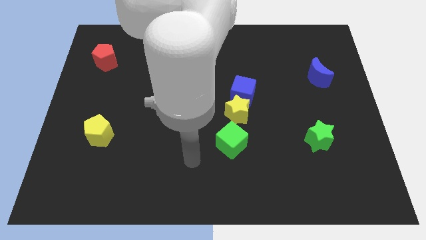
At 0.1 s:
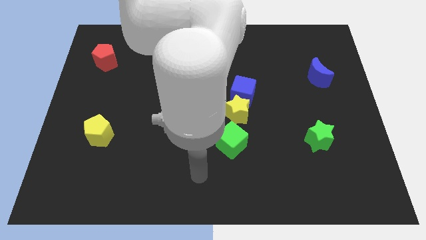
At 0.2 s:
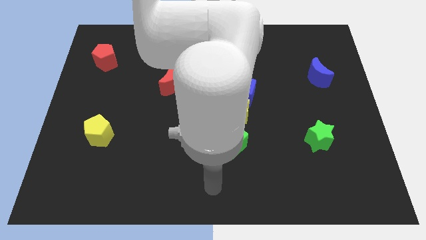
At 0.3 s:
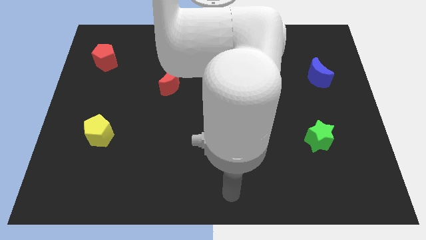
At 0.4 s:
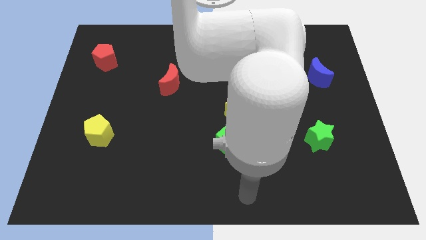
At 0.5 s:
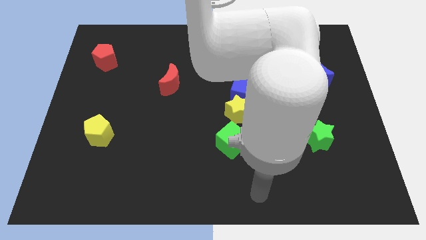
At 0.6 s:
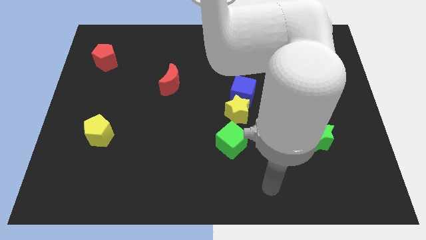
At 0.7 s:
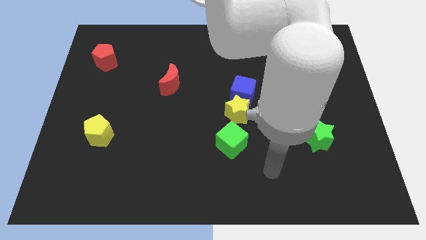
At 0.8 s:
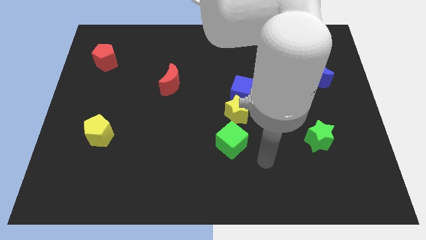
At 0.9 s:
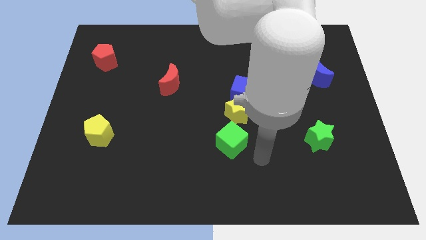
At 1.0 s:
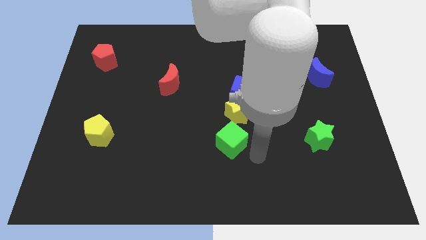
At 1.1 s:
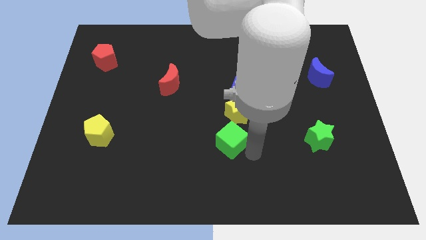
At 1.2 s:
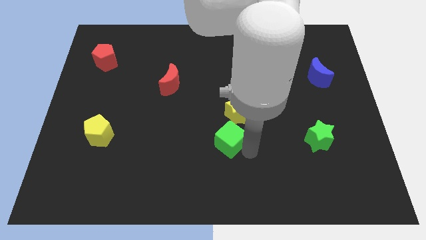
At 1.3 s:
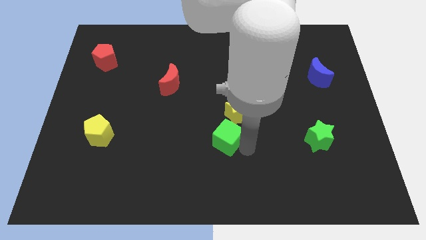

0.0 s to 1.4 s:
place your arm at the bottom right side of the green cube

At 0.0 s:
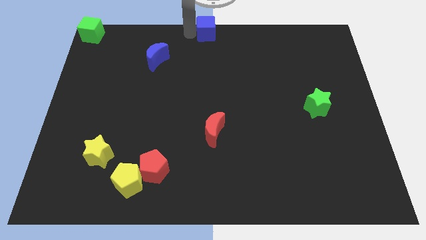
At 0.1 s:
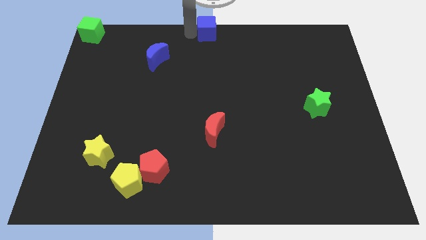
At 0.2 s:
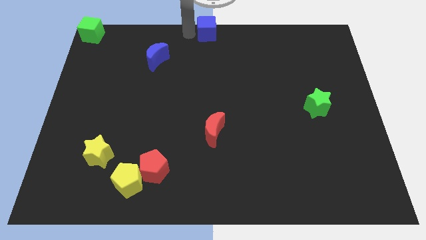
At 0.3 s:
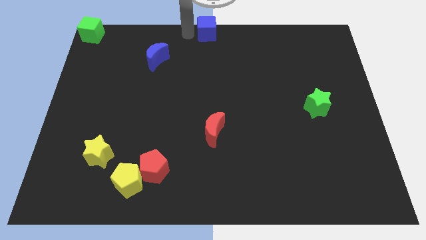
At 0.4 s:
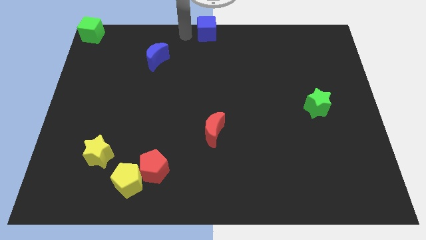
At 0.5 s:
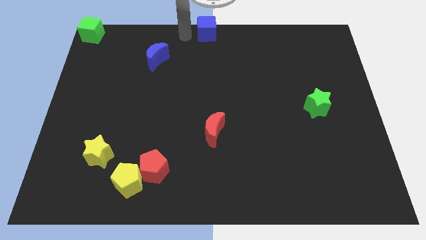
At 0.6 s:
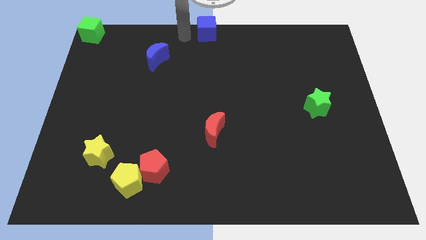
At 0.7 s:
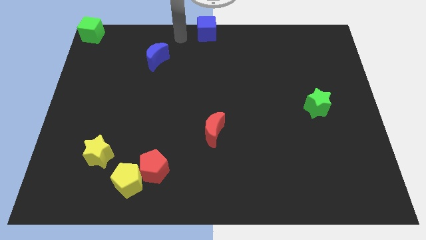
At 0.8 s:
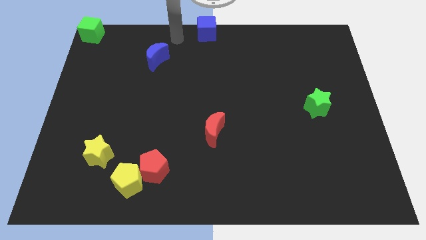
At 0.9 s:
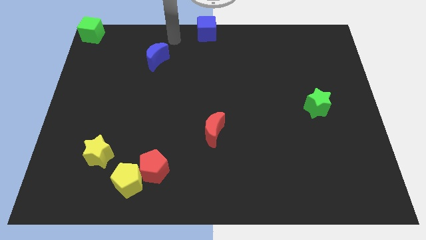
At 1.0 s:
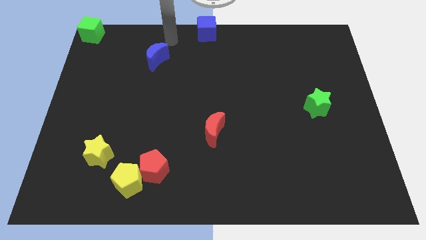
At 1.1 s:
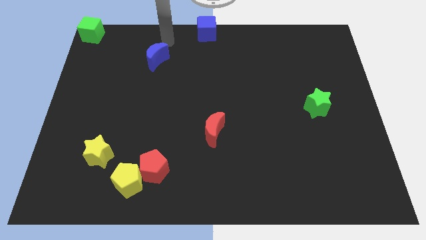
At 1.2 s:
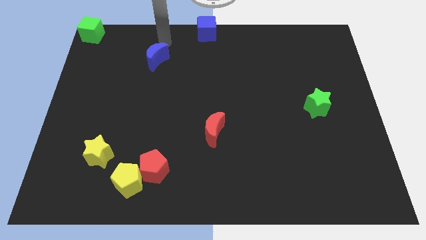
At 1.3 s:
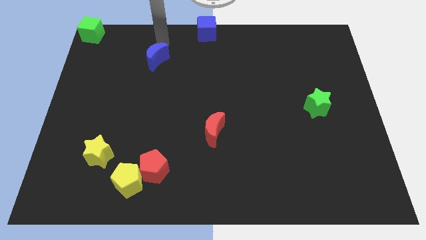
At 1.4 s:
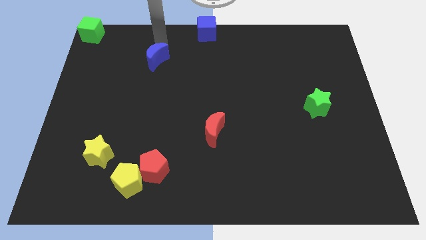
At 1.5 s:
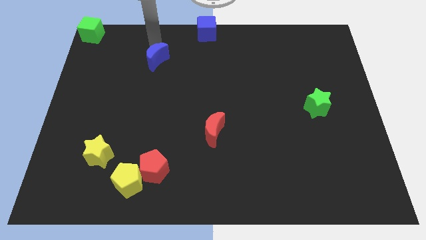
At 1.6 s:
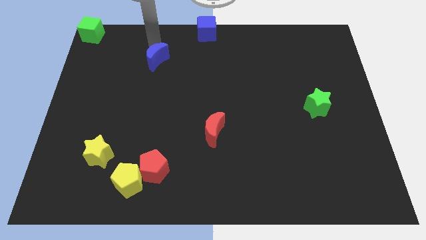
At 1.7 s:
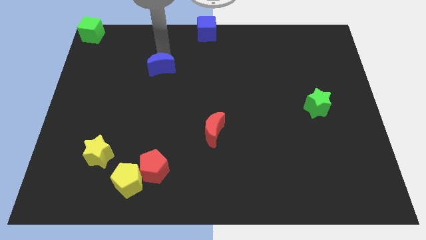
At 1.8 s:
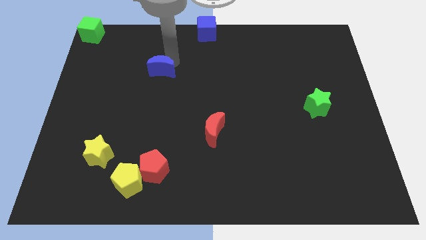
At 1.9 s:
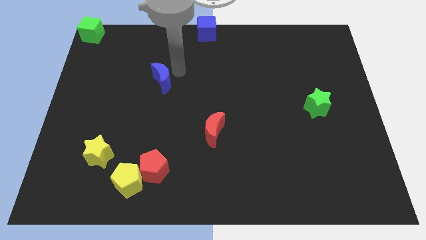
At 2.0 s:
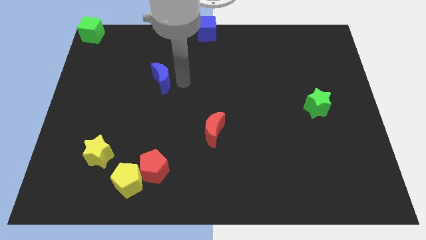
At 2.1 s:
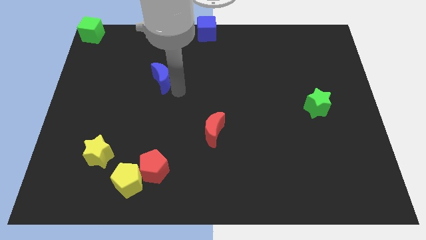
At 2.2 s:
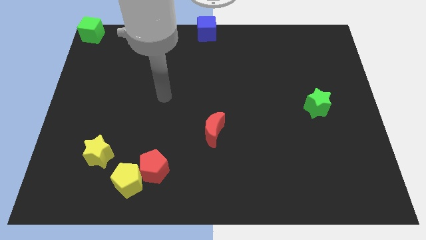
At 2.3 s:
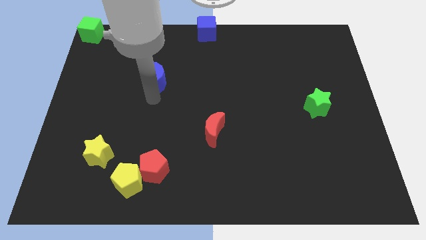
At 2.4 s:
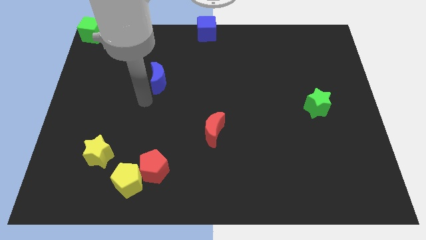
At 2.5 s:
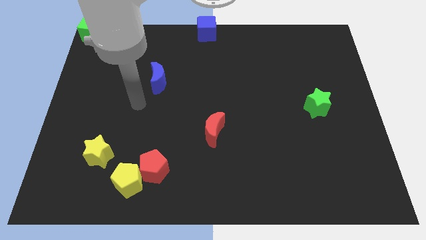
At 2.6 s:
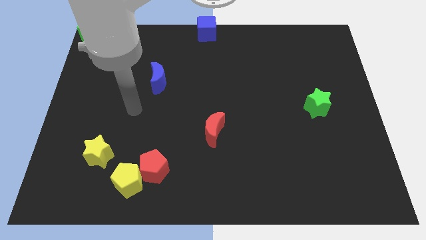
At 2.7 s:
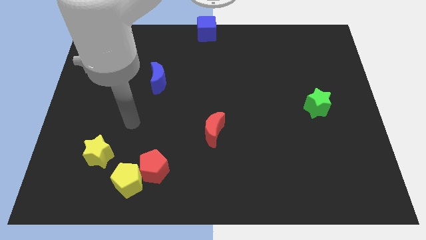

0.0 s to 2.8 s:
move the blue crescent slightly to the bottom

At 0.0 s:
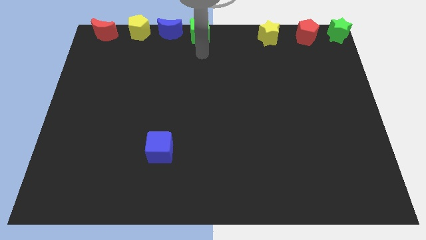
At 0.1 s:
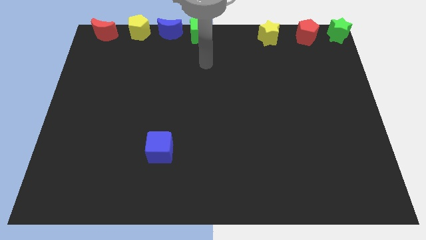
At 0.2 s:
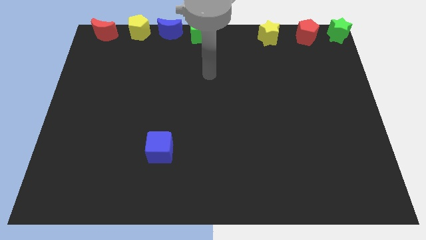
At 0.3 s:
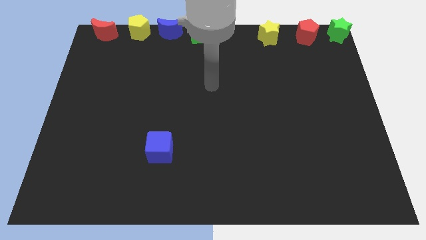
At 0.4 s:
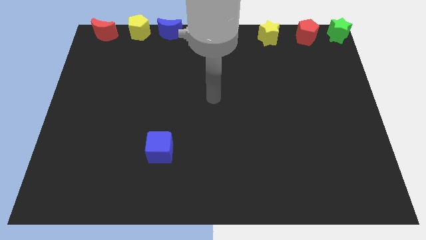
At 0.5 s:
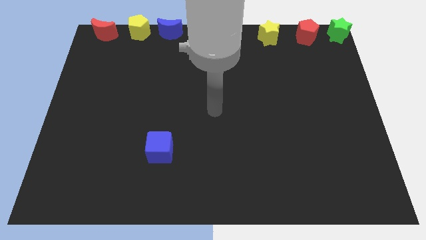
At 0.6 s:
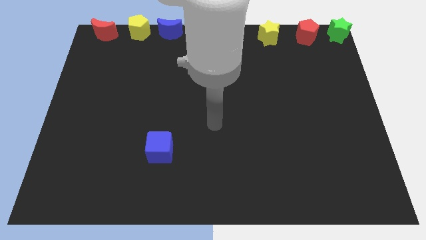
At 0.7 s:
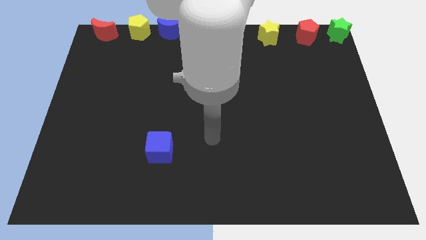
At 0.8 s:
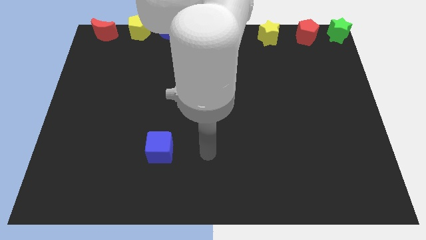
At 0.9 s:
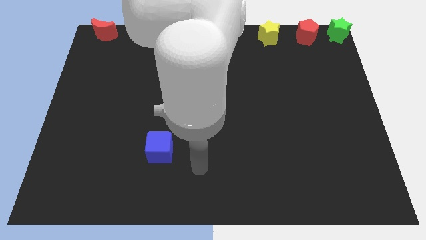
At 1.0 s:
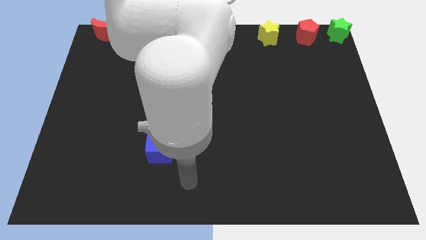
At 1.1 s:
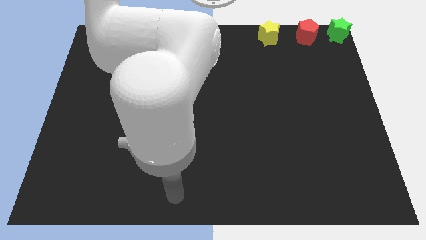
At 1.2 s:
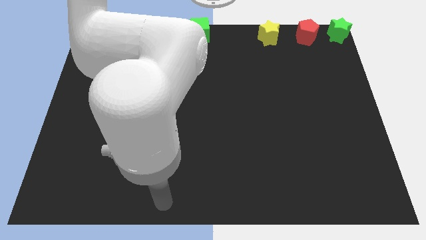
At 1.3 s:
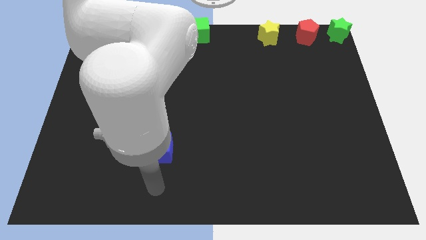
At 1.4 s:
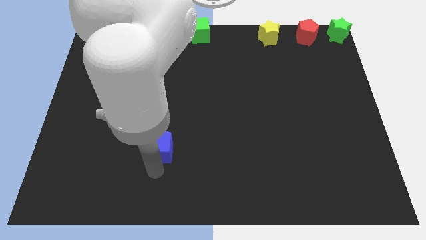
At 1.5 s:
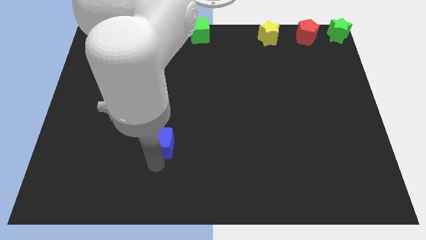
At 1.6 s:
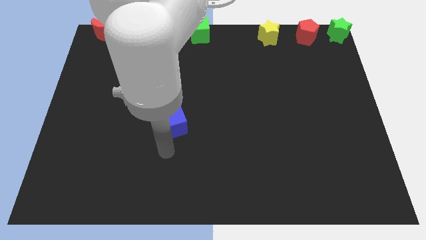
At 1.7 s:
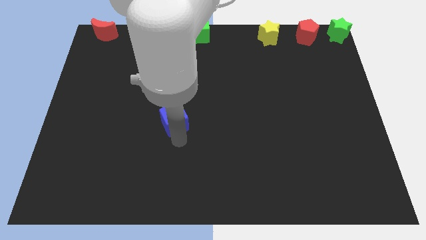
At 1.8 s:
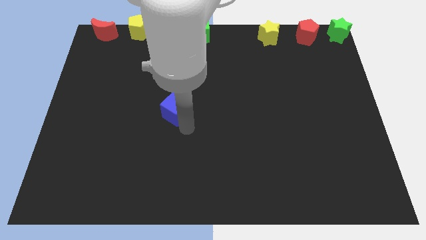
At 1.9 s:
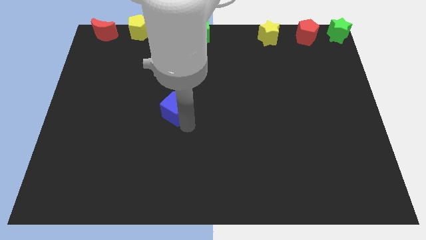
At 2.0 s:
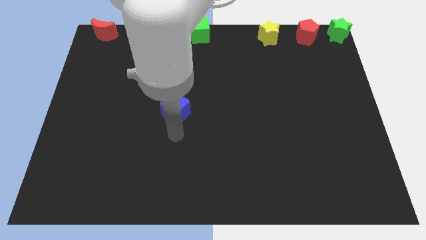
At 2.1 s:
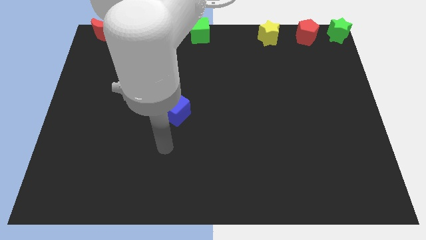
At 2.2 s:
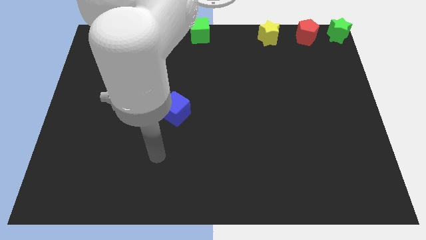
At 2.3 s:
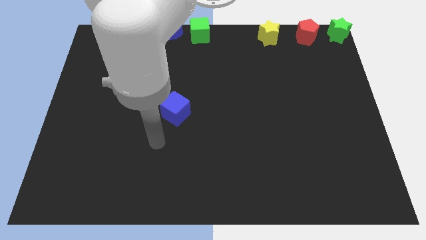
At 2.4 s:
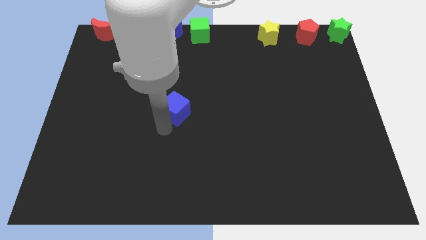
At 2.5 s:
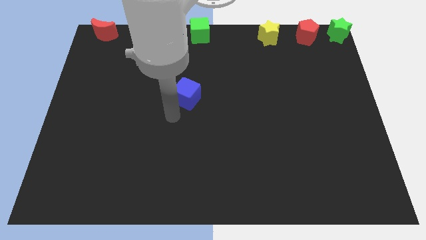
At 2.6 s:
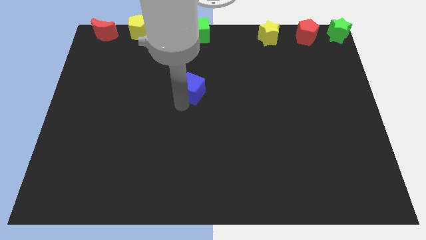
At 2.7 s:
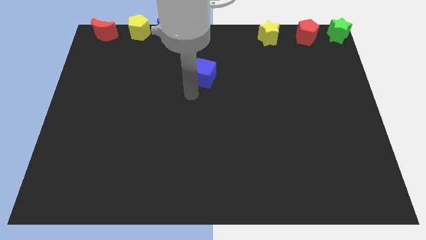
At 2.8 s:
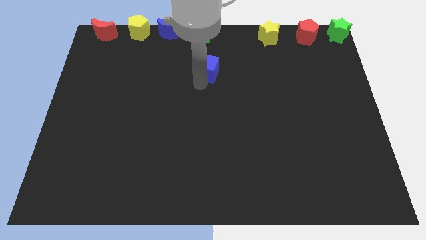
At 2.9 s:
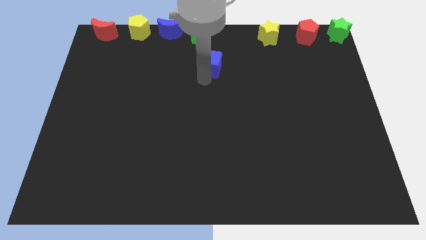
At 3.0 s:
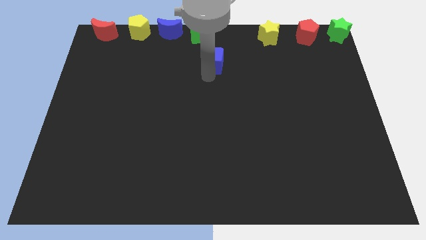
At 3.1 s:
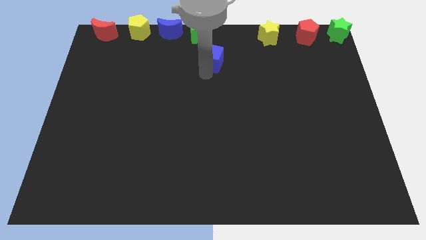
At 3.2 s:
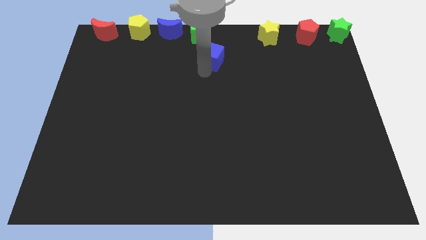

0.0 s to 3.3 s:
push the blue cube towards the top center of the board

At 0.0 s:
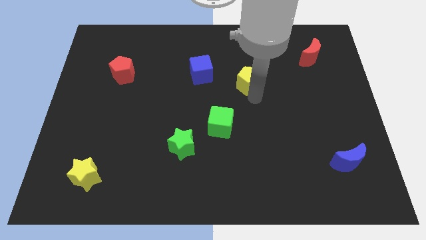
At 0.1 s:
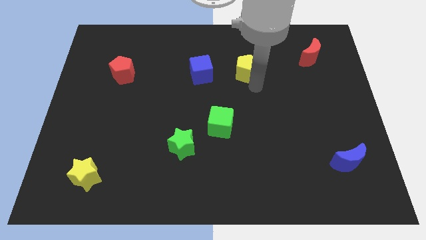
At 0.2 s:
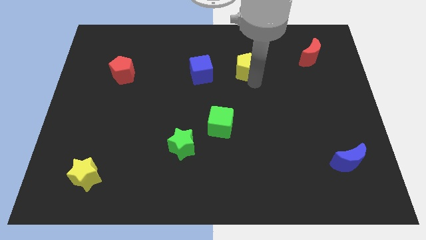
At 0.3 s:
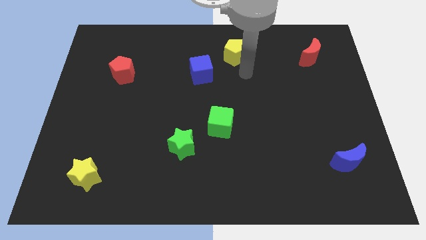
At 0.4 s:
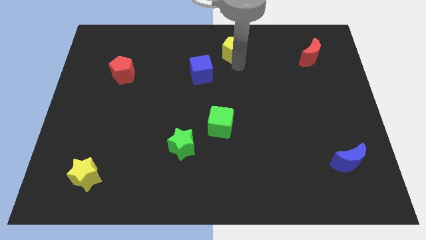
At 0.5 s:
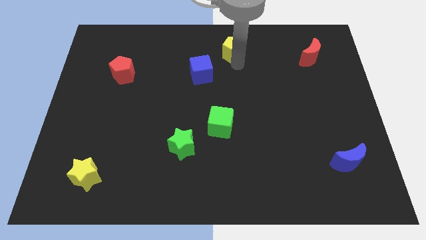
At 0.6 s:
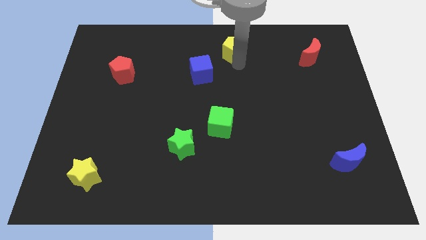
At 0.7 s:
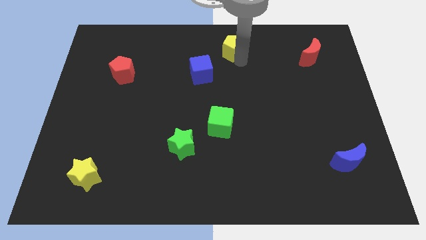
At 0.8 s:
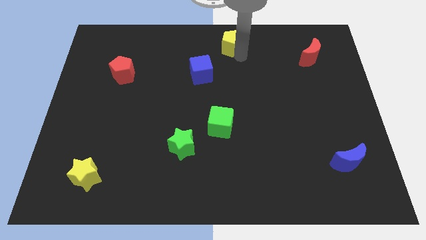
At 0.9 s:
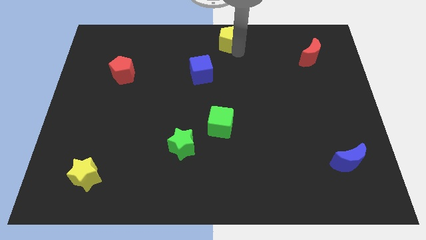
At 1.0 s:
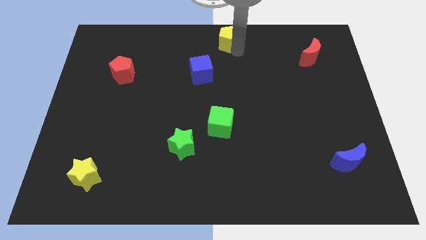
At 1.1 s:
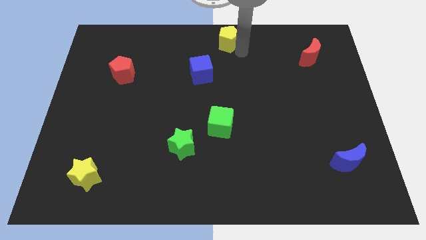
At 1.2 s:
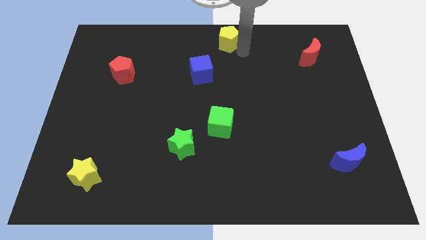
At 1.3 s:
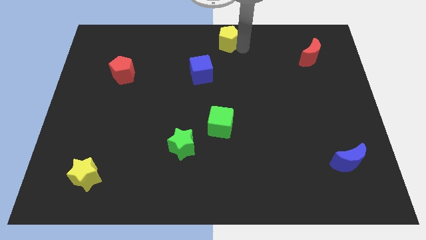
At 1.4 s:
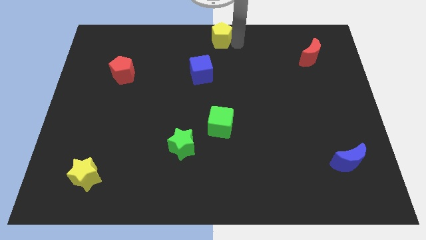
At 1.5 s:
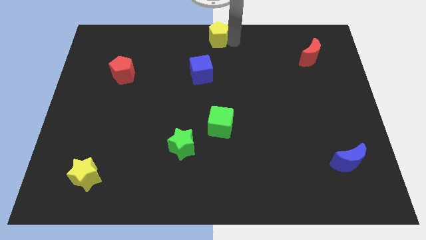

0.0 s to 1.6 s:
push yellow pentagon to the top center of the board
